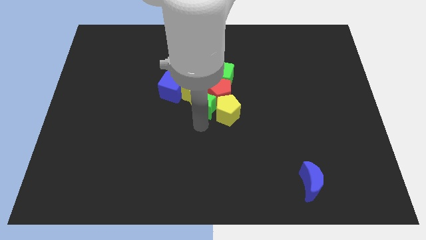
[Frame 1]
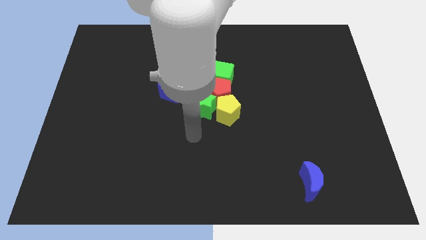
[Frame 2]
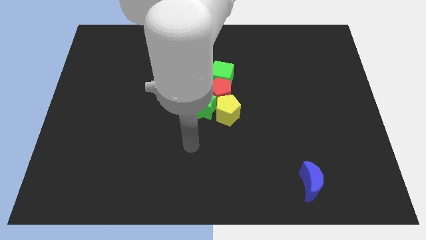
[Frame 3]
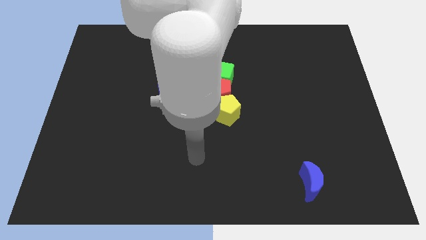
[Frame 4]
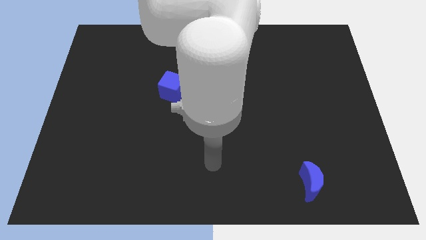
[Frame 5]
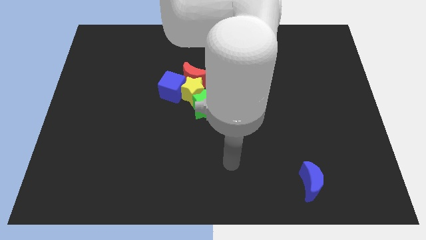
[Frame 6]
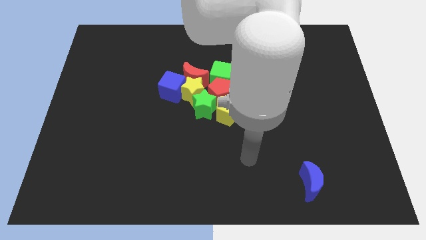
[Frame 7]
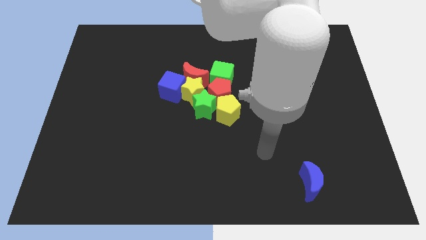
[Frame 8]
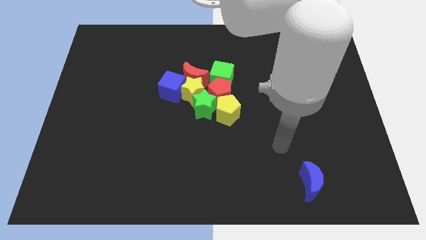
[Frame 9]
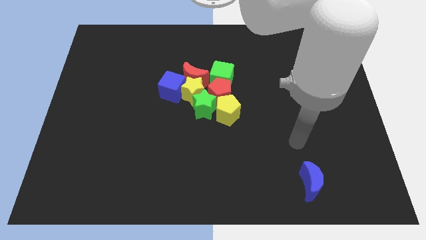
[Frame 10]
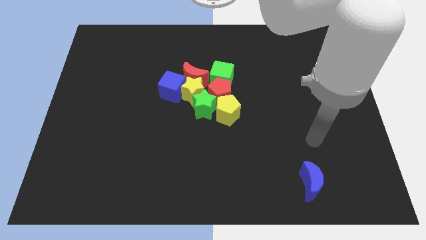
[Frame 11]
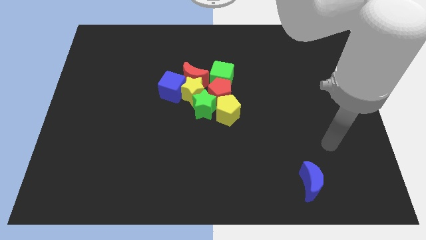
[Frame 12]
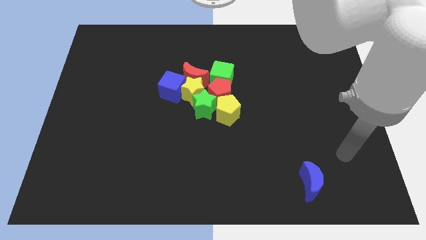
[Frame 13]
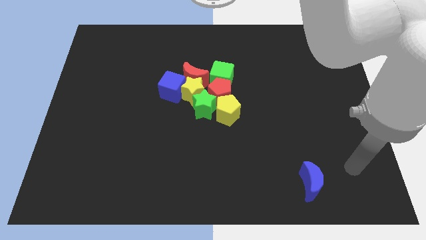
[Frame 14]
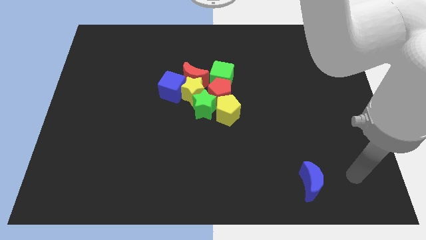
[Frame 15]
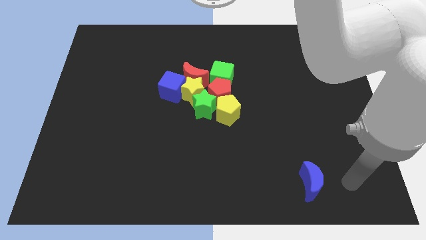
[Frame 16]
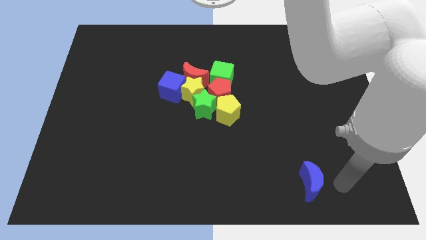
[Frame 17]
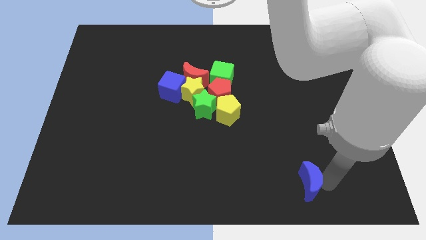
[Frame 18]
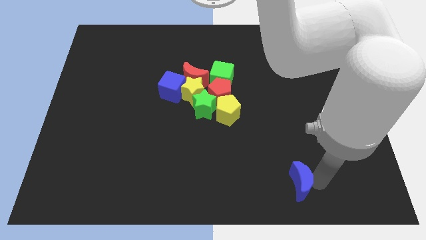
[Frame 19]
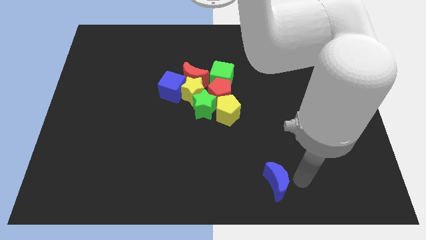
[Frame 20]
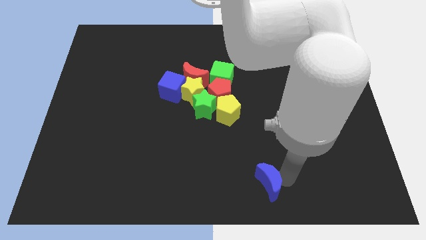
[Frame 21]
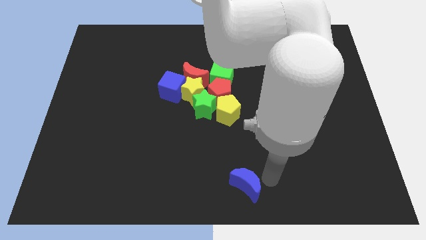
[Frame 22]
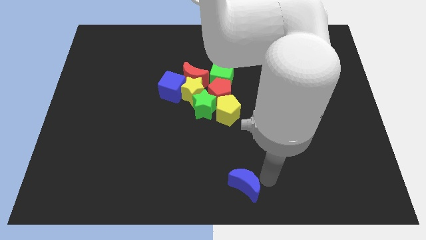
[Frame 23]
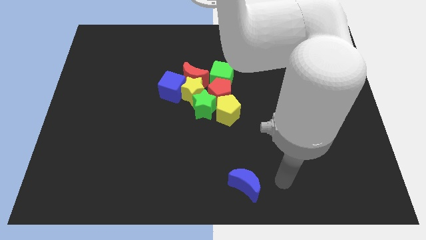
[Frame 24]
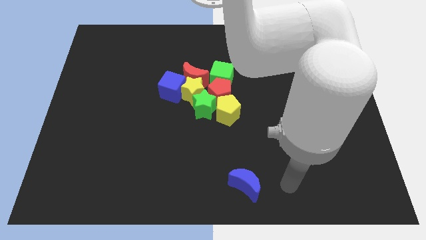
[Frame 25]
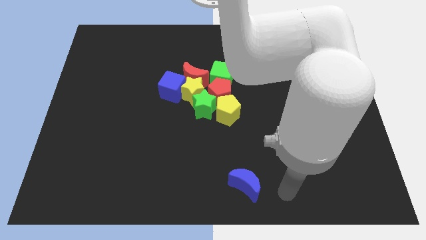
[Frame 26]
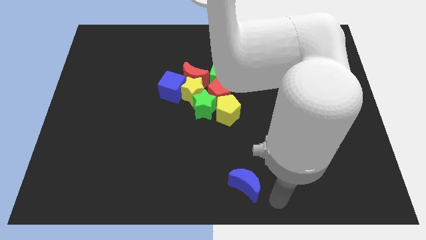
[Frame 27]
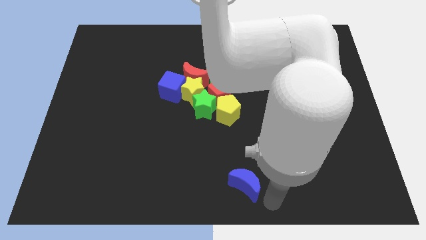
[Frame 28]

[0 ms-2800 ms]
move the arm away from the green star

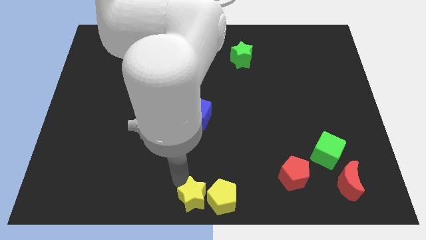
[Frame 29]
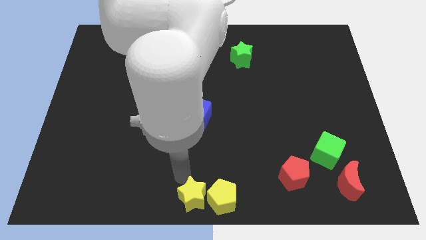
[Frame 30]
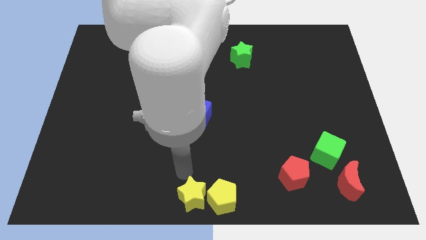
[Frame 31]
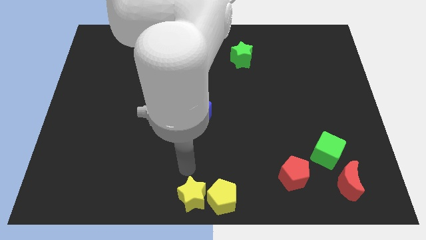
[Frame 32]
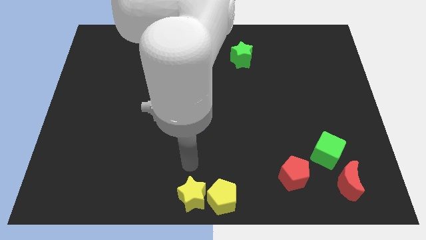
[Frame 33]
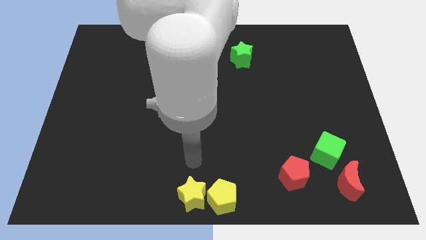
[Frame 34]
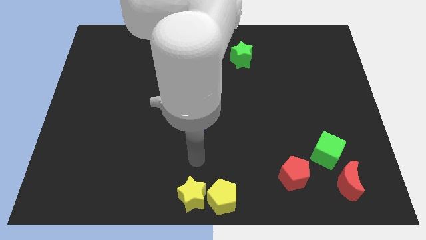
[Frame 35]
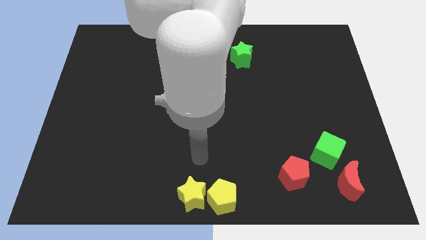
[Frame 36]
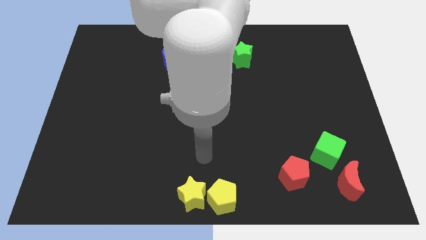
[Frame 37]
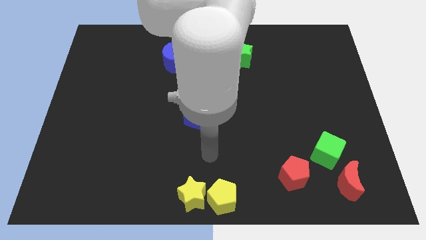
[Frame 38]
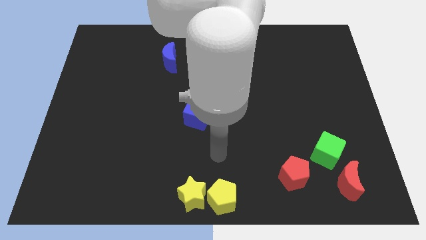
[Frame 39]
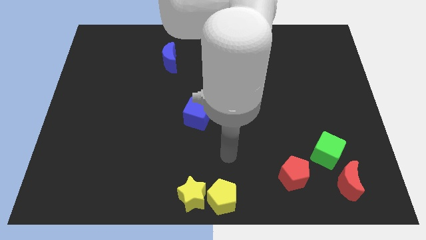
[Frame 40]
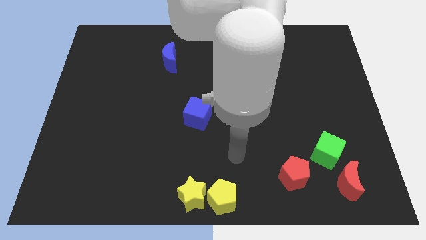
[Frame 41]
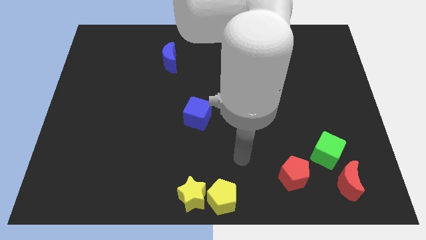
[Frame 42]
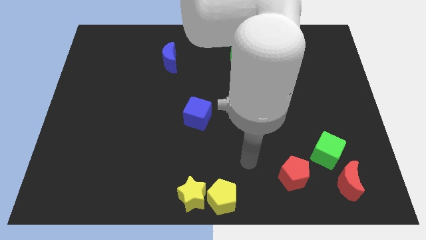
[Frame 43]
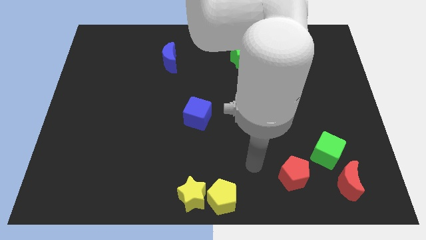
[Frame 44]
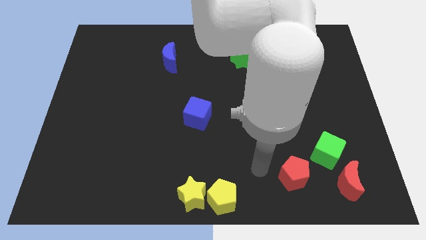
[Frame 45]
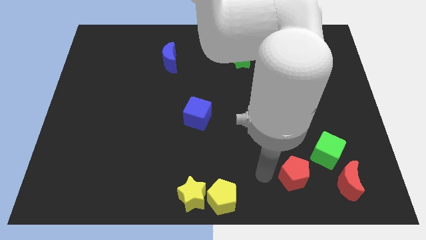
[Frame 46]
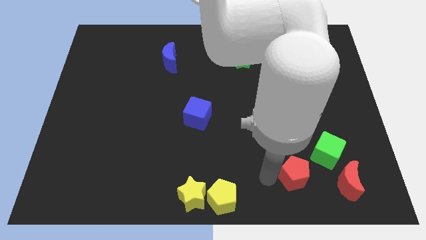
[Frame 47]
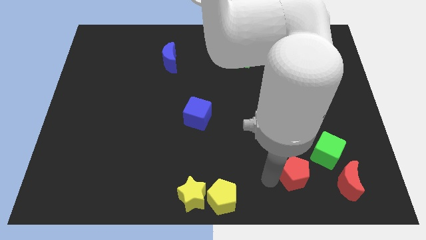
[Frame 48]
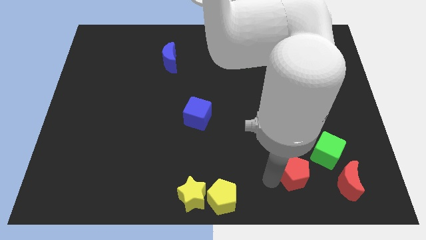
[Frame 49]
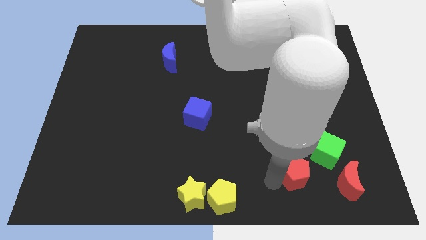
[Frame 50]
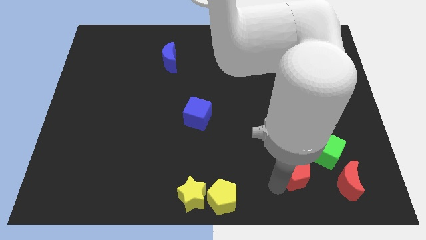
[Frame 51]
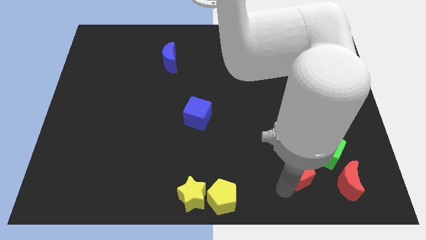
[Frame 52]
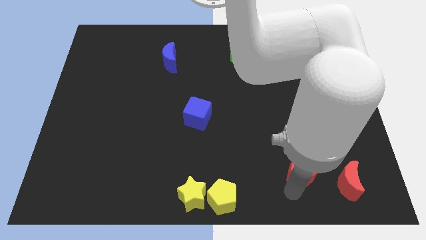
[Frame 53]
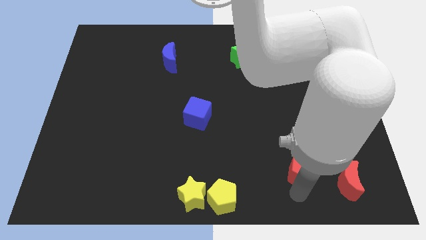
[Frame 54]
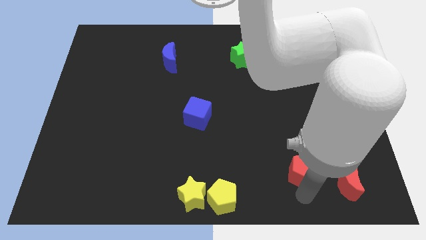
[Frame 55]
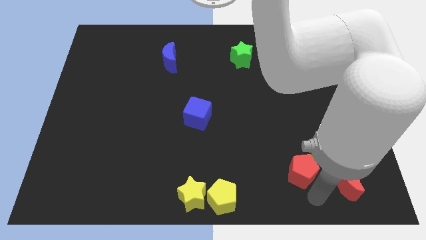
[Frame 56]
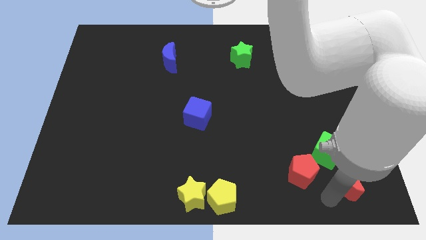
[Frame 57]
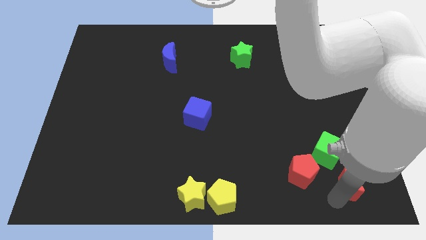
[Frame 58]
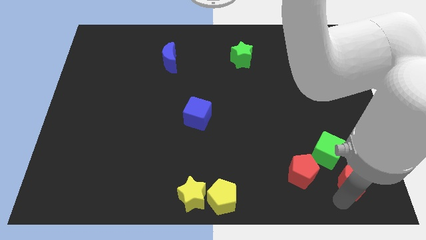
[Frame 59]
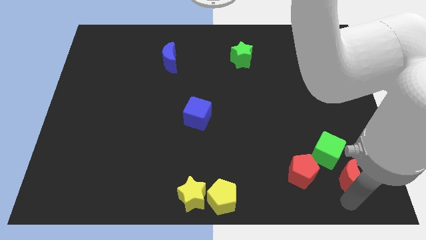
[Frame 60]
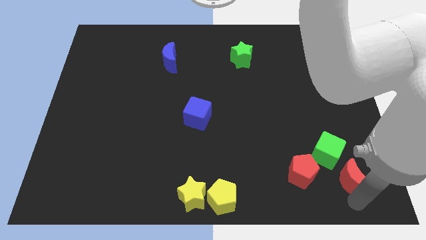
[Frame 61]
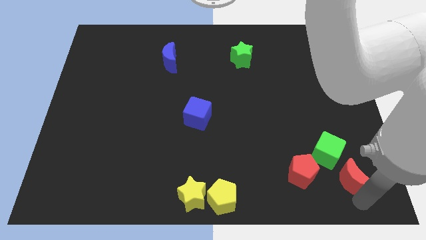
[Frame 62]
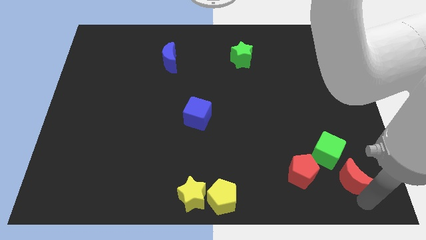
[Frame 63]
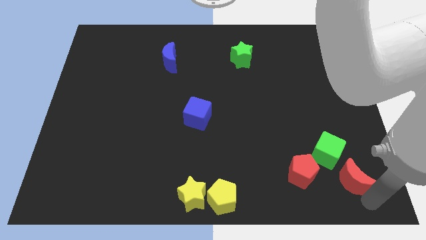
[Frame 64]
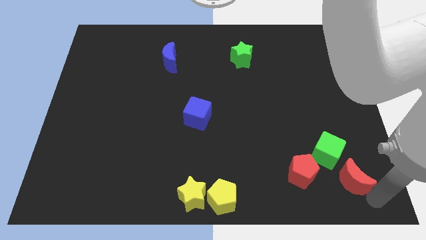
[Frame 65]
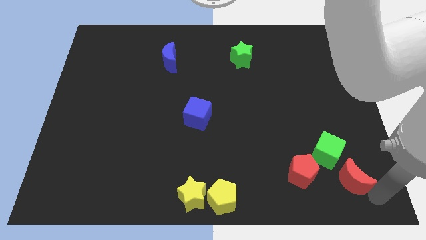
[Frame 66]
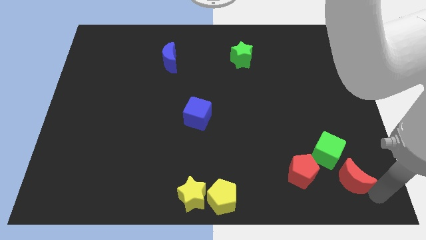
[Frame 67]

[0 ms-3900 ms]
move your arm to the bottom right of the red crescent

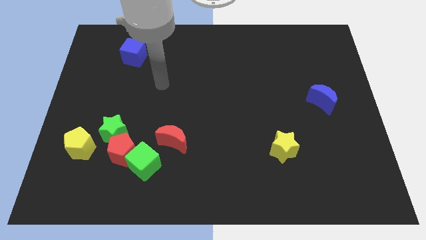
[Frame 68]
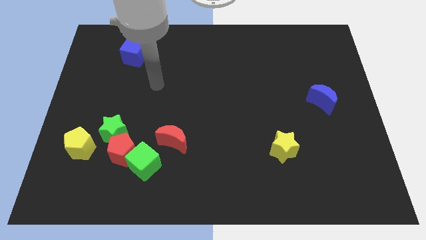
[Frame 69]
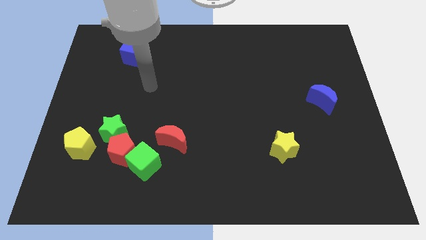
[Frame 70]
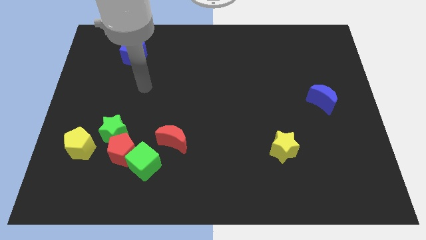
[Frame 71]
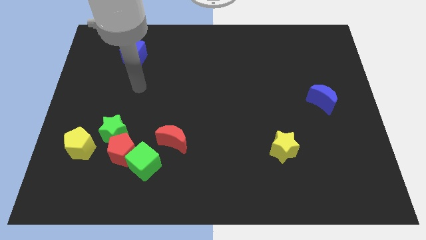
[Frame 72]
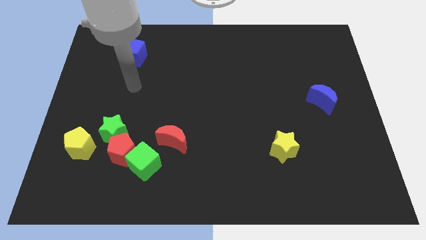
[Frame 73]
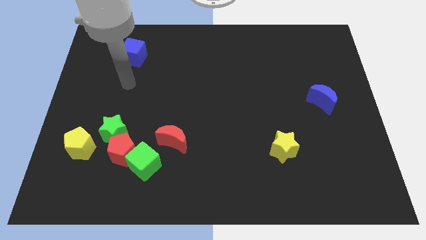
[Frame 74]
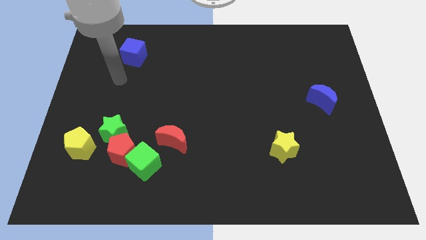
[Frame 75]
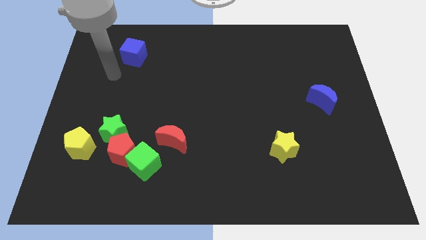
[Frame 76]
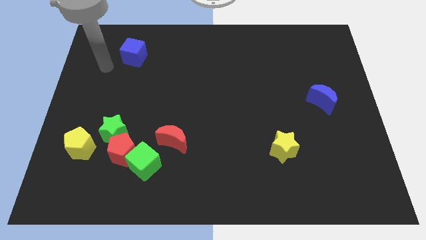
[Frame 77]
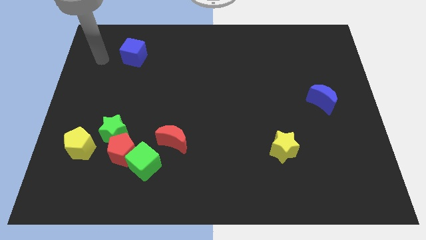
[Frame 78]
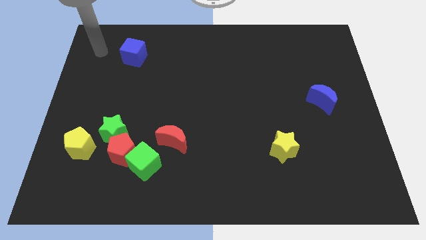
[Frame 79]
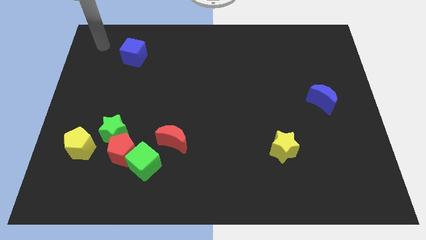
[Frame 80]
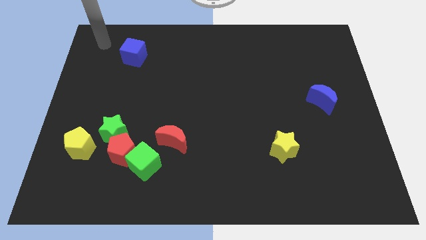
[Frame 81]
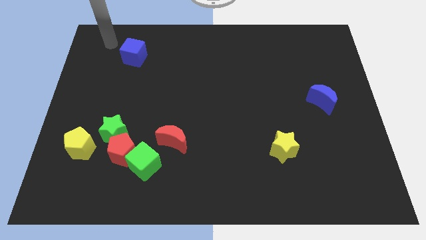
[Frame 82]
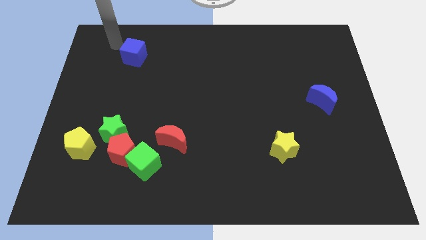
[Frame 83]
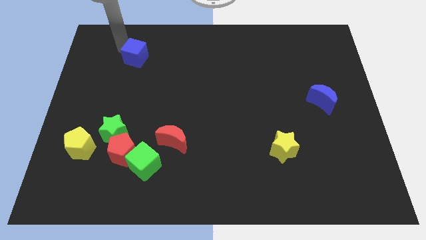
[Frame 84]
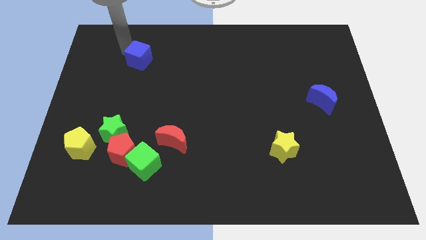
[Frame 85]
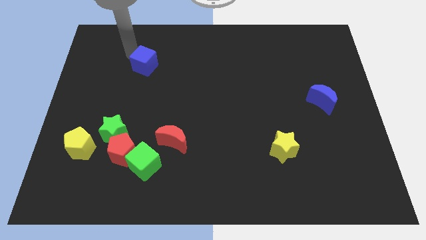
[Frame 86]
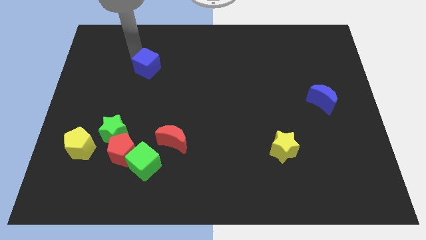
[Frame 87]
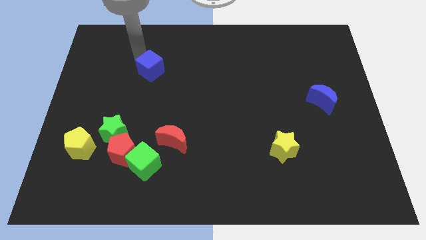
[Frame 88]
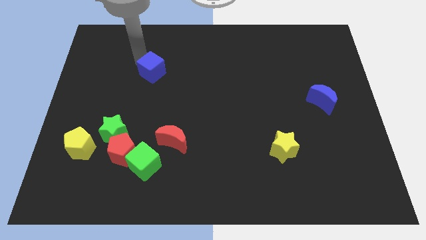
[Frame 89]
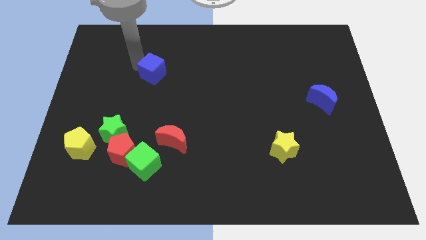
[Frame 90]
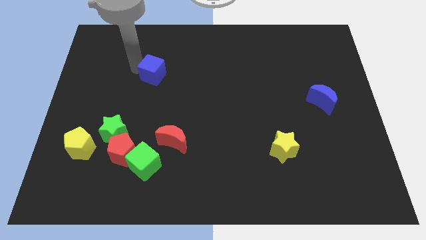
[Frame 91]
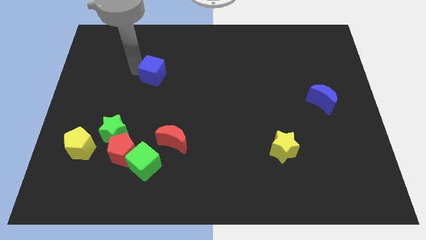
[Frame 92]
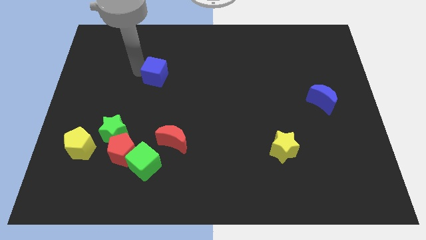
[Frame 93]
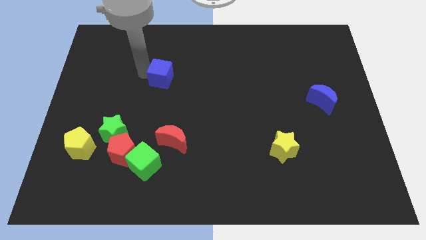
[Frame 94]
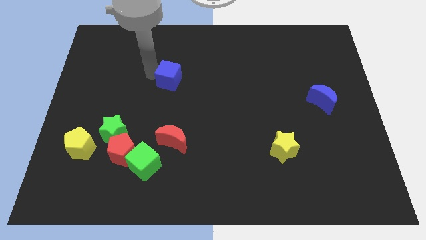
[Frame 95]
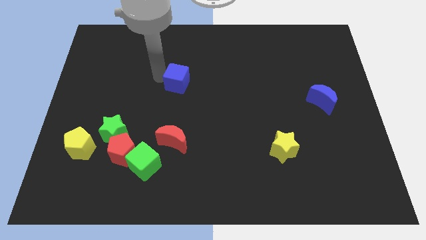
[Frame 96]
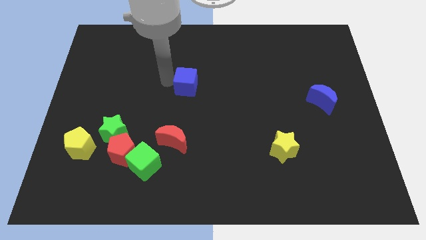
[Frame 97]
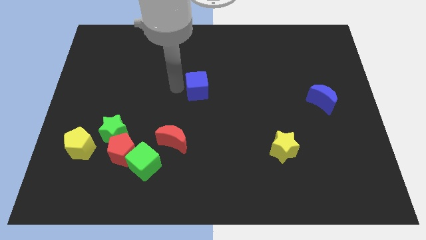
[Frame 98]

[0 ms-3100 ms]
drag blue cube to the center
